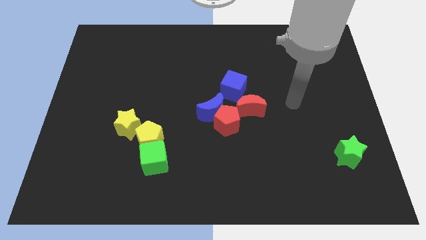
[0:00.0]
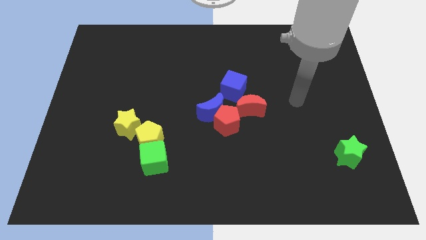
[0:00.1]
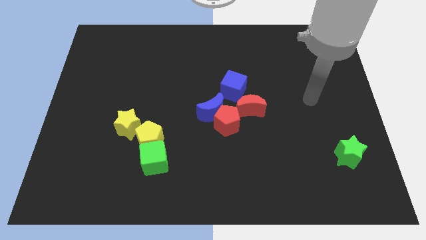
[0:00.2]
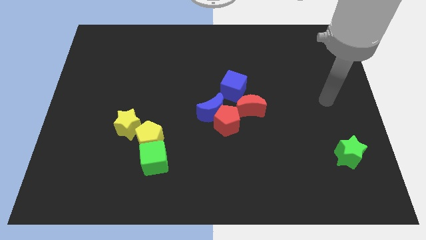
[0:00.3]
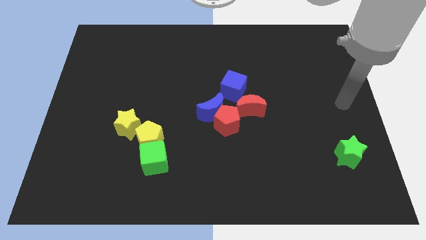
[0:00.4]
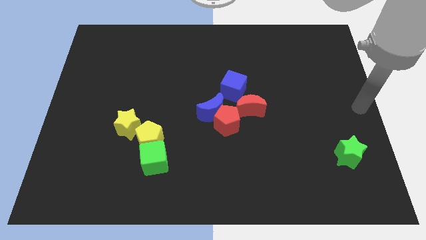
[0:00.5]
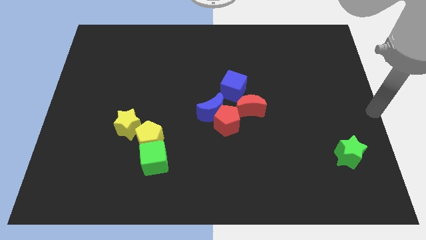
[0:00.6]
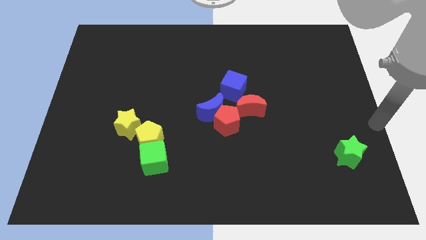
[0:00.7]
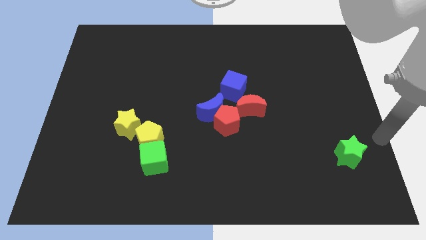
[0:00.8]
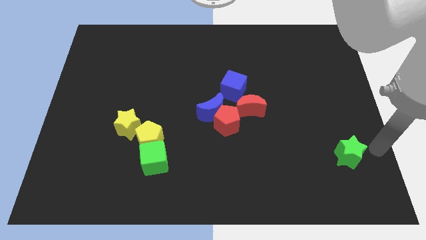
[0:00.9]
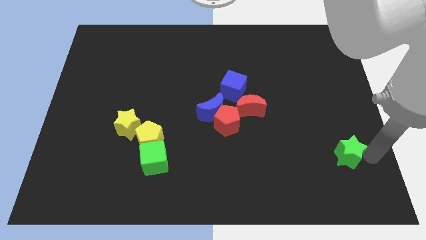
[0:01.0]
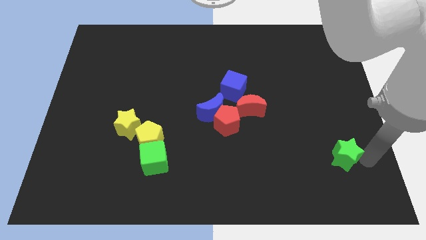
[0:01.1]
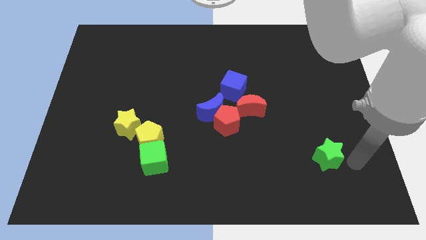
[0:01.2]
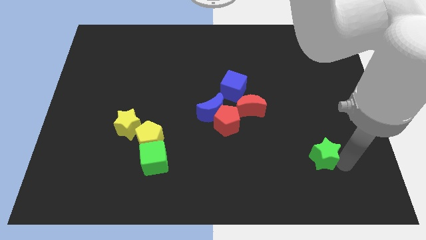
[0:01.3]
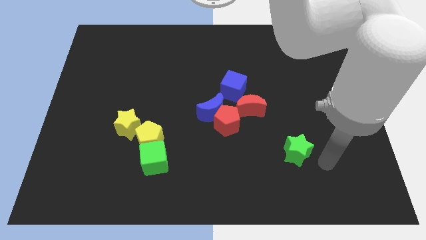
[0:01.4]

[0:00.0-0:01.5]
move the green star slightly towards left

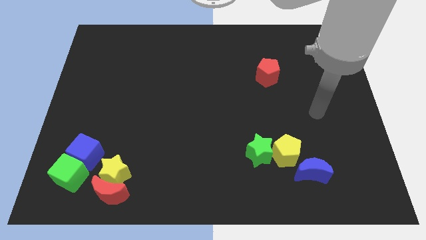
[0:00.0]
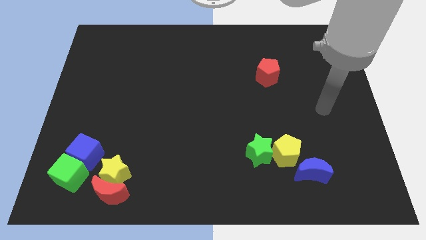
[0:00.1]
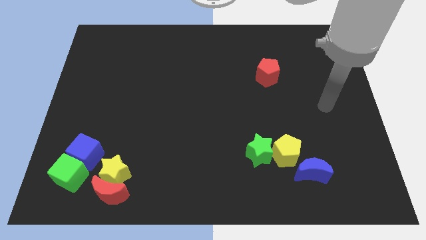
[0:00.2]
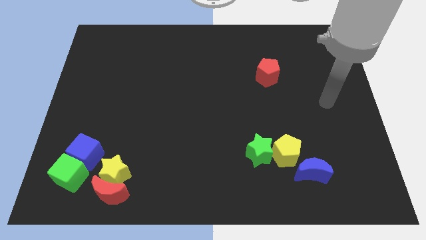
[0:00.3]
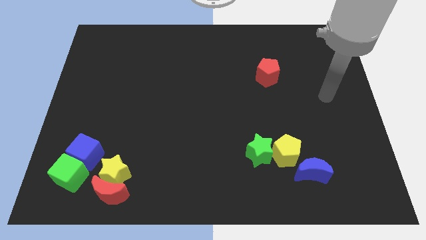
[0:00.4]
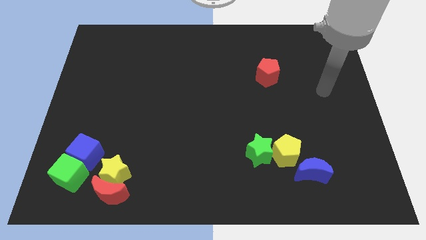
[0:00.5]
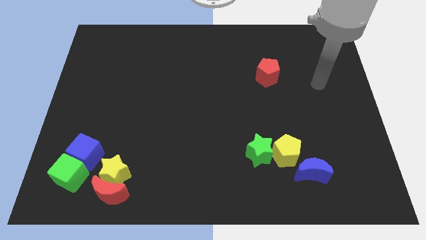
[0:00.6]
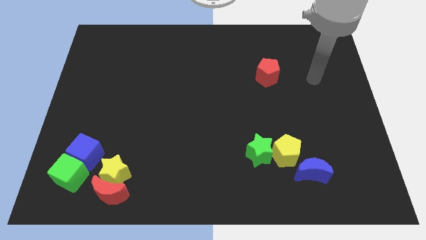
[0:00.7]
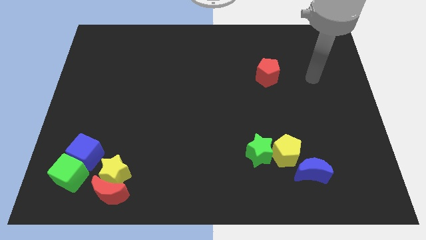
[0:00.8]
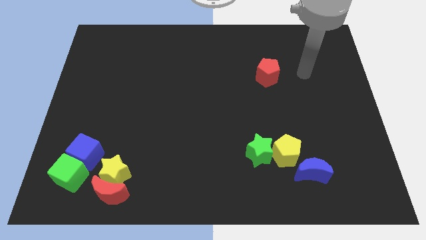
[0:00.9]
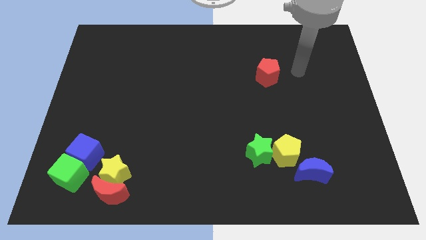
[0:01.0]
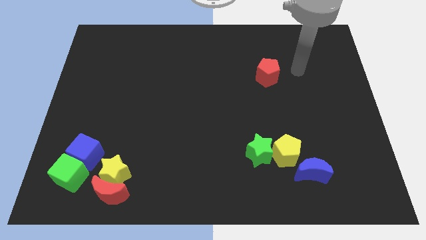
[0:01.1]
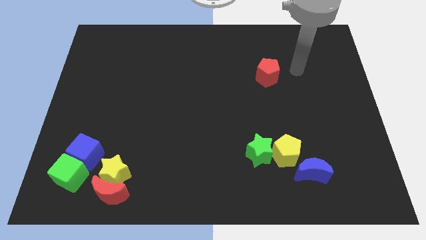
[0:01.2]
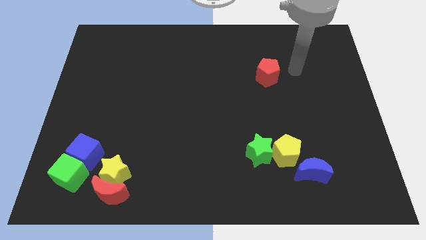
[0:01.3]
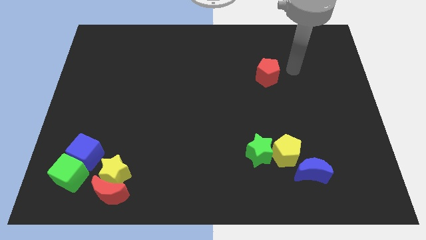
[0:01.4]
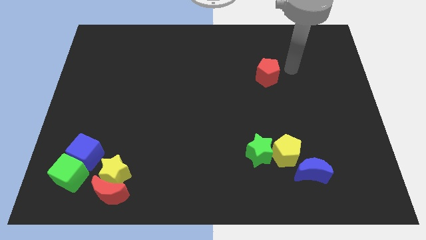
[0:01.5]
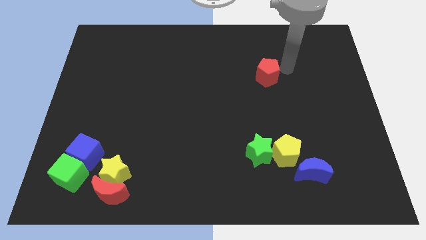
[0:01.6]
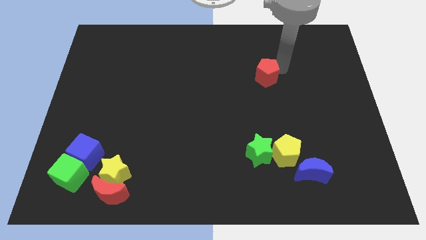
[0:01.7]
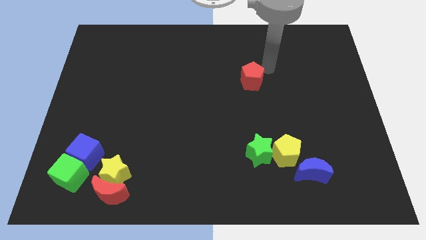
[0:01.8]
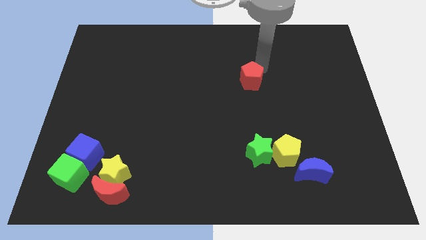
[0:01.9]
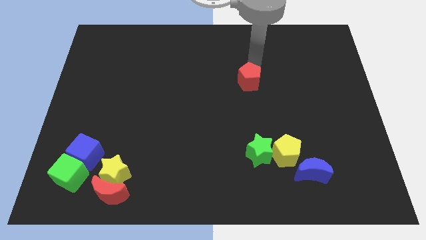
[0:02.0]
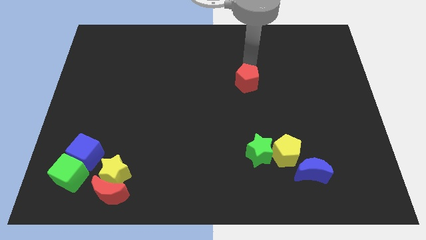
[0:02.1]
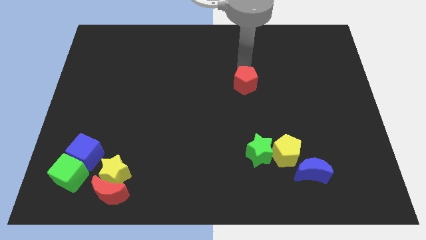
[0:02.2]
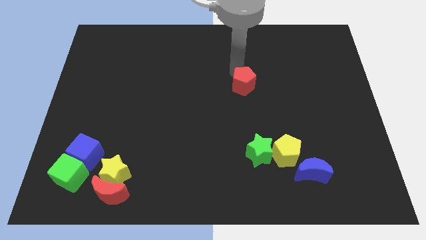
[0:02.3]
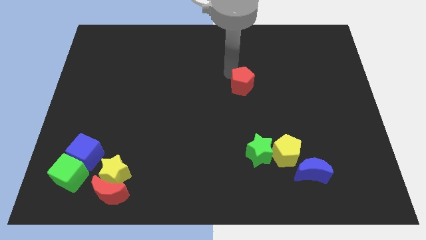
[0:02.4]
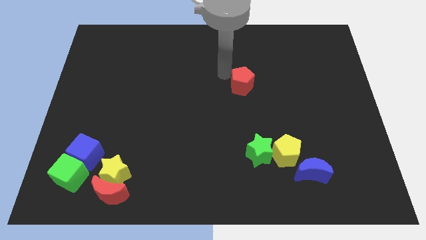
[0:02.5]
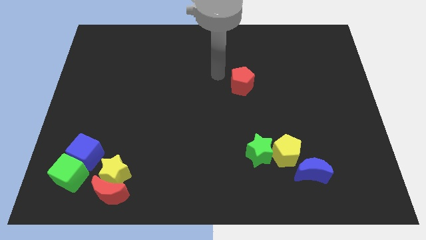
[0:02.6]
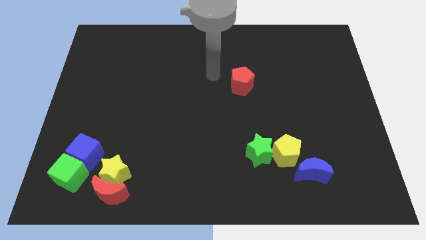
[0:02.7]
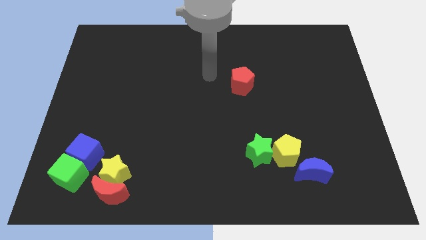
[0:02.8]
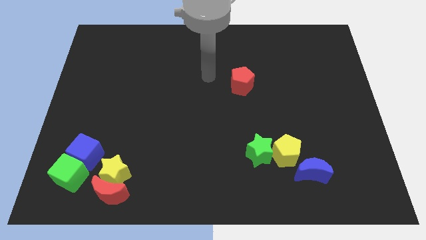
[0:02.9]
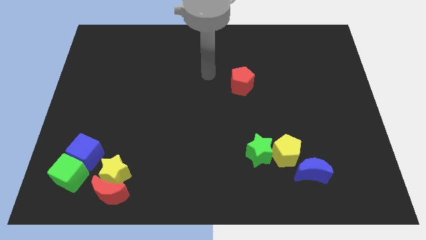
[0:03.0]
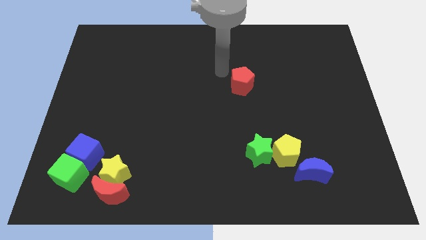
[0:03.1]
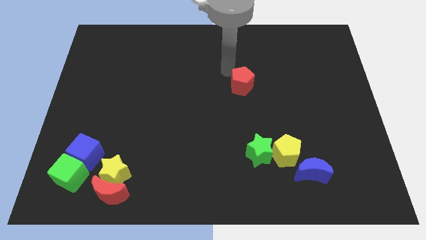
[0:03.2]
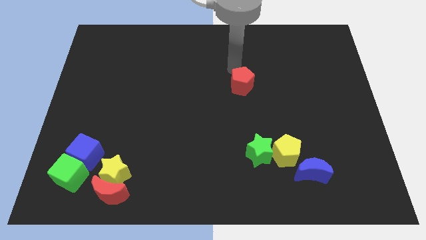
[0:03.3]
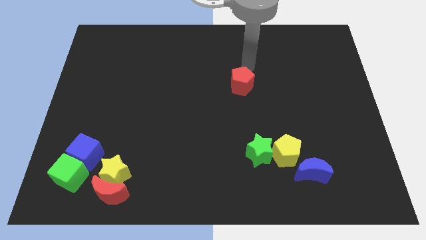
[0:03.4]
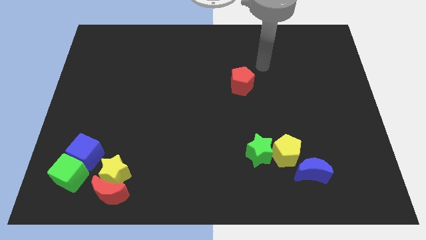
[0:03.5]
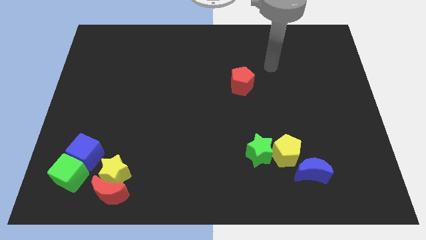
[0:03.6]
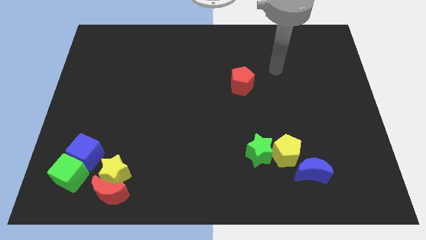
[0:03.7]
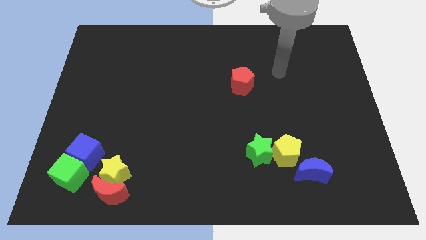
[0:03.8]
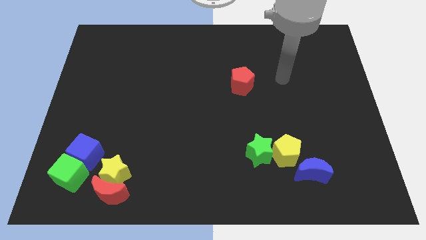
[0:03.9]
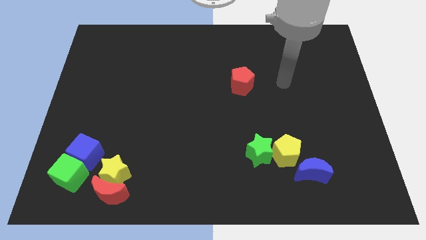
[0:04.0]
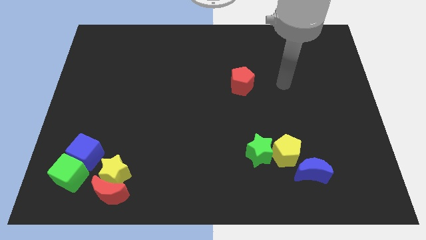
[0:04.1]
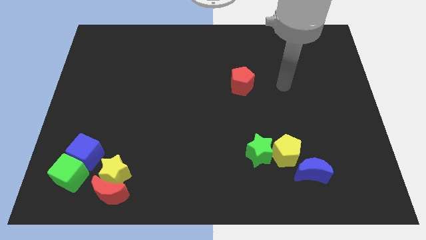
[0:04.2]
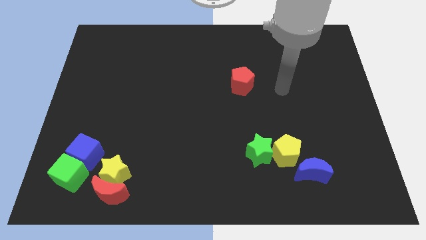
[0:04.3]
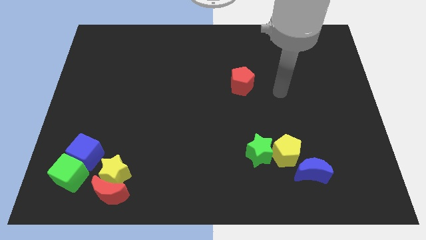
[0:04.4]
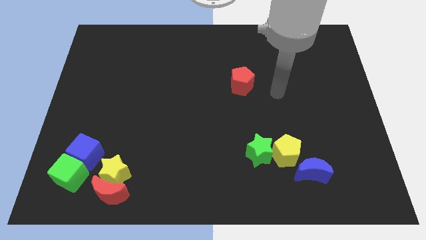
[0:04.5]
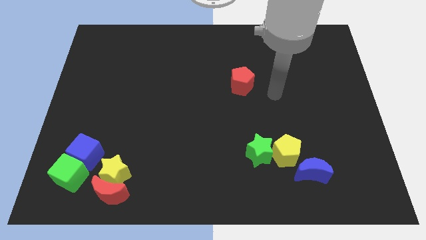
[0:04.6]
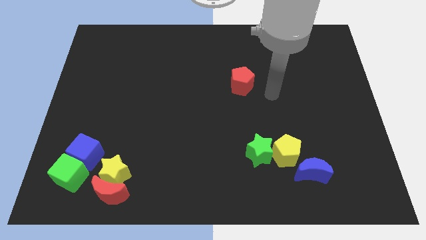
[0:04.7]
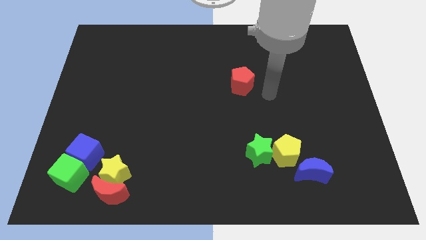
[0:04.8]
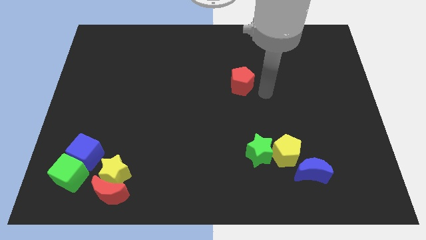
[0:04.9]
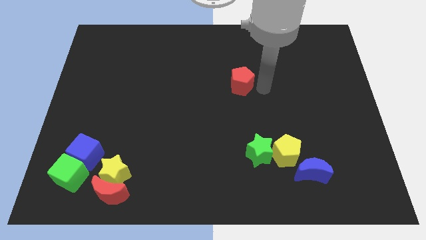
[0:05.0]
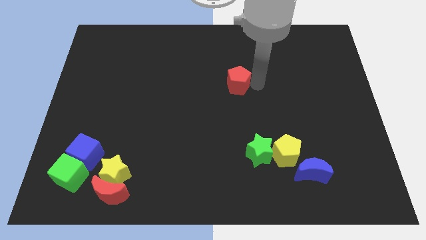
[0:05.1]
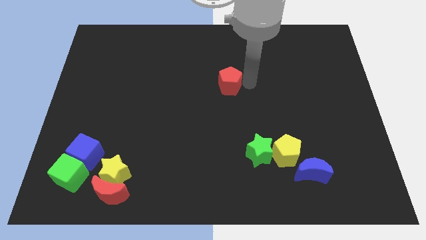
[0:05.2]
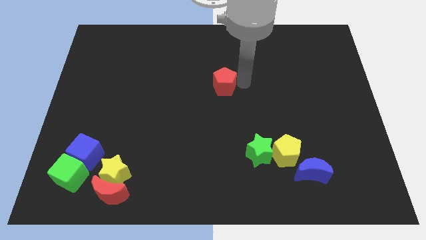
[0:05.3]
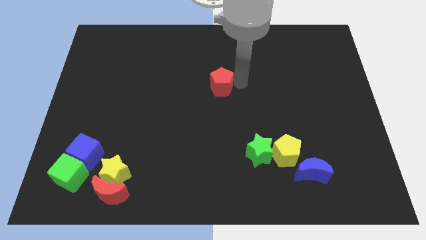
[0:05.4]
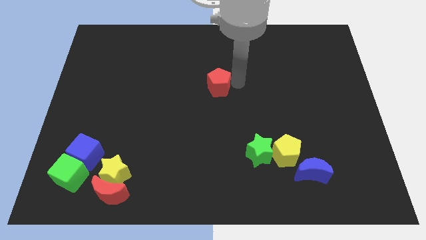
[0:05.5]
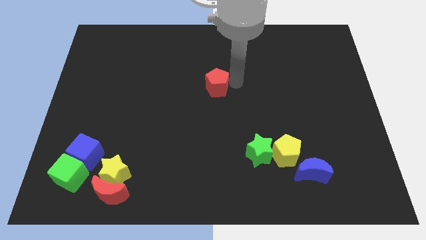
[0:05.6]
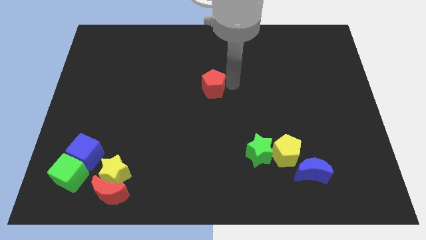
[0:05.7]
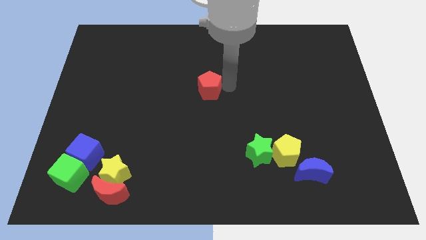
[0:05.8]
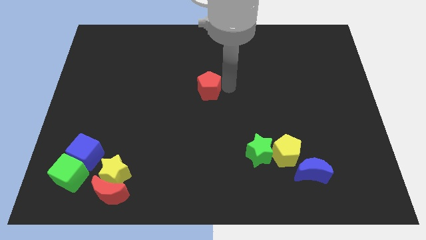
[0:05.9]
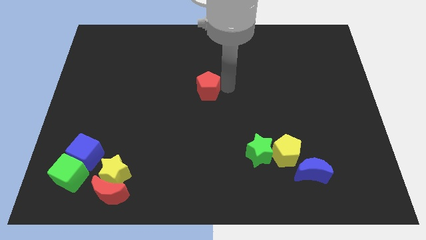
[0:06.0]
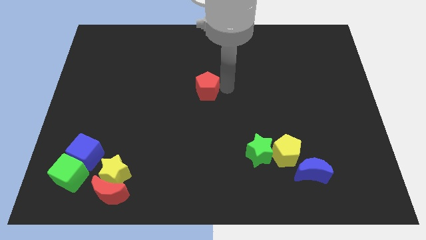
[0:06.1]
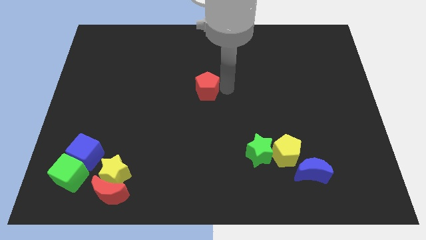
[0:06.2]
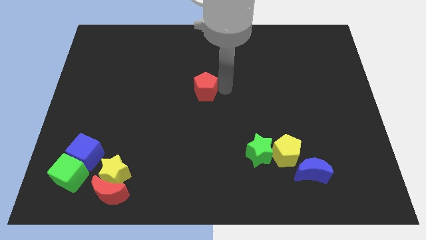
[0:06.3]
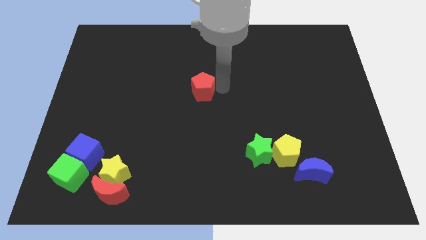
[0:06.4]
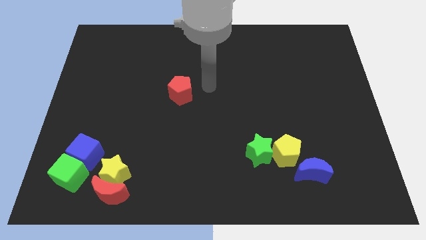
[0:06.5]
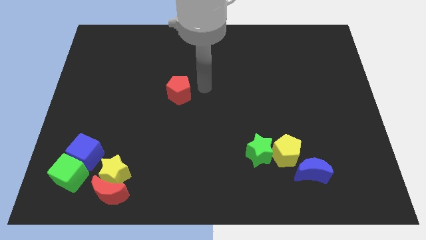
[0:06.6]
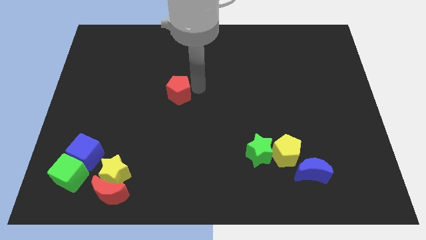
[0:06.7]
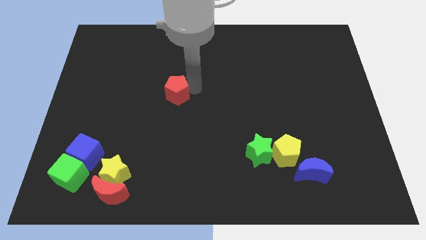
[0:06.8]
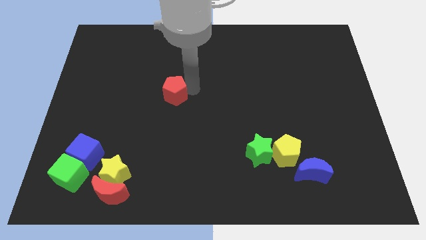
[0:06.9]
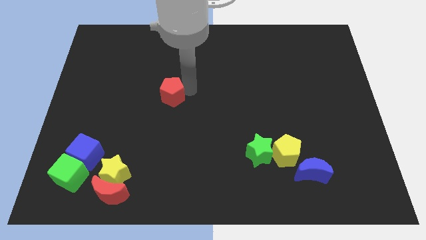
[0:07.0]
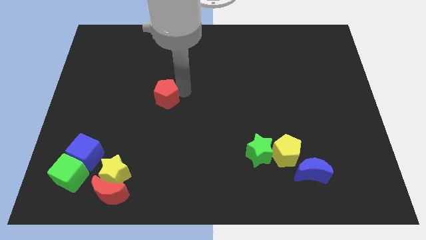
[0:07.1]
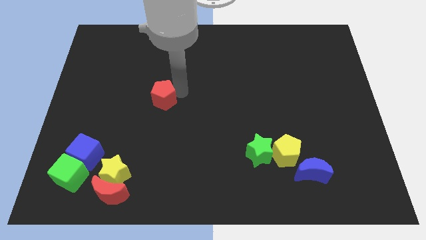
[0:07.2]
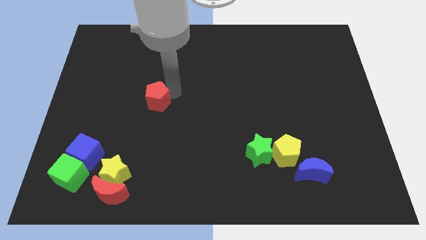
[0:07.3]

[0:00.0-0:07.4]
move the red pentagon to the top right of the yellow star
